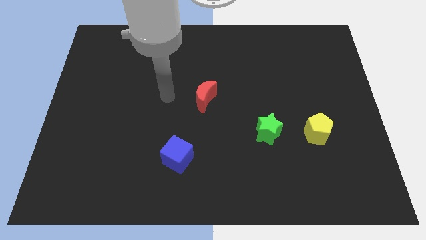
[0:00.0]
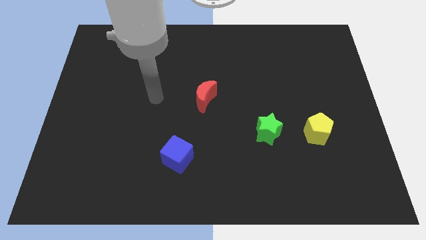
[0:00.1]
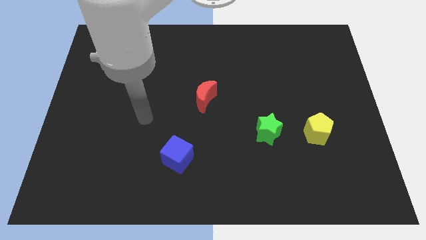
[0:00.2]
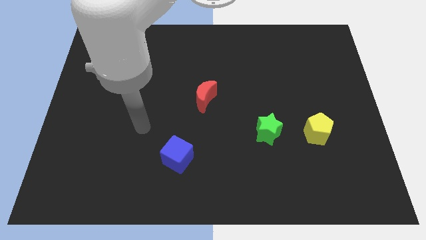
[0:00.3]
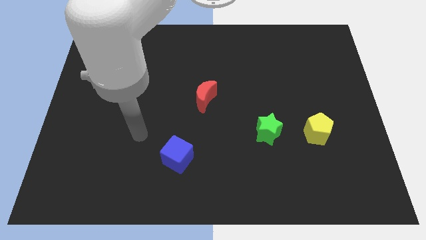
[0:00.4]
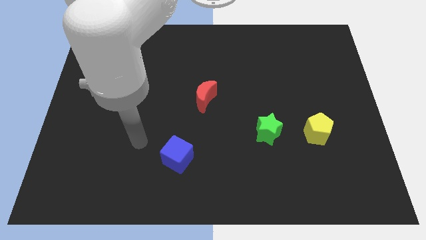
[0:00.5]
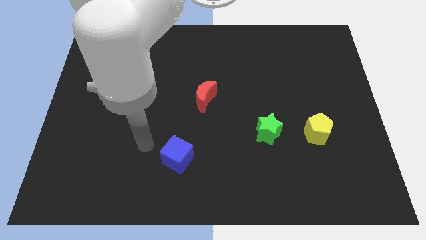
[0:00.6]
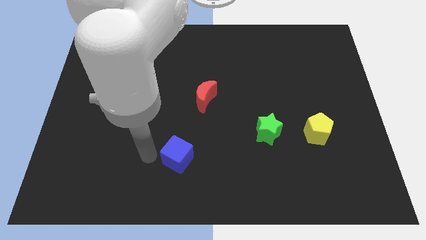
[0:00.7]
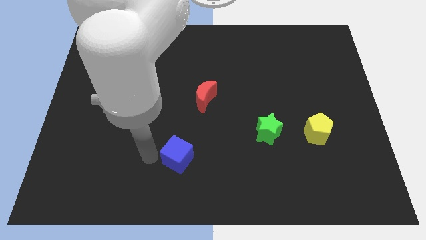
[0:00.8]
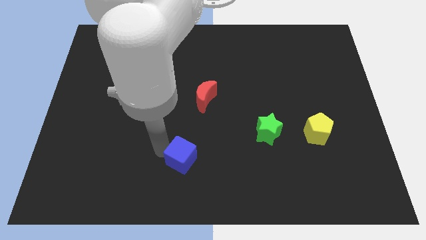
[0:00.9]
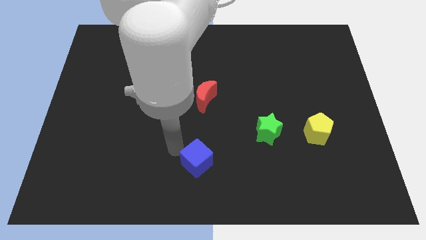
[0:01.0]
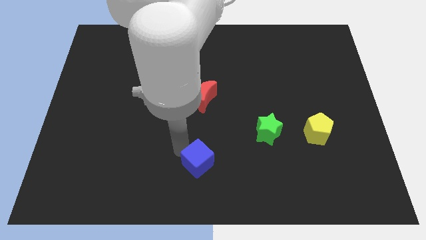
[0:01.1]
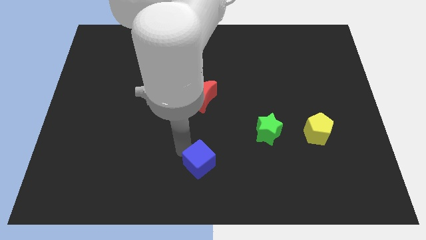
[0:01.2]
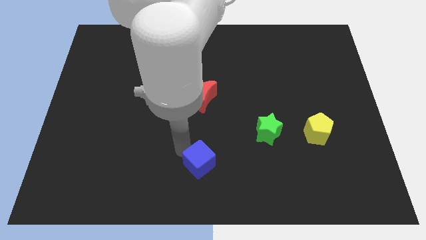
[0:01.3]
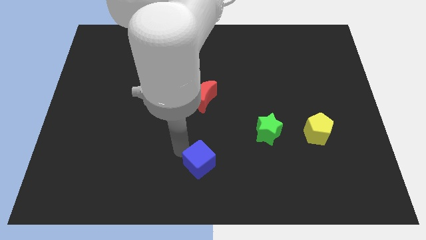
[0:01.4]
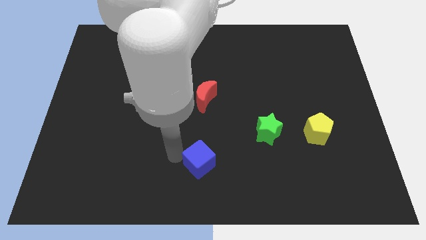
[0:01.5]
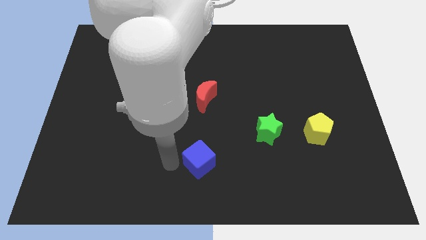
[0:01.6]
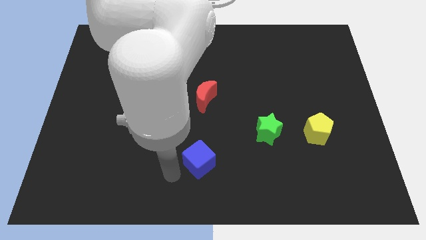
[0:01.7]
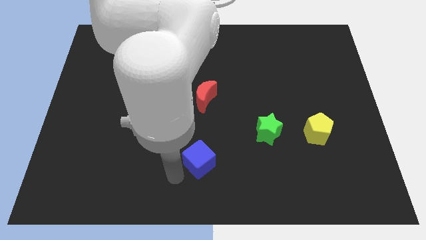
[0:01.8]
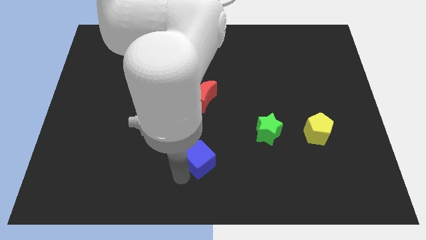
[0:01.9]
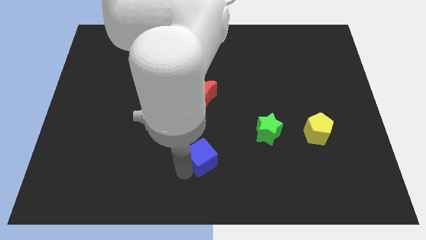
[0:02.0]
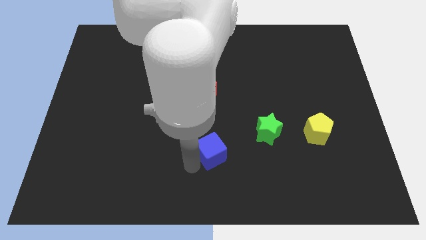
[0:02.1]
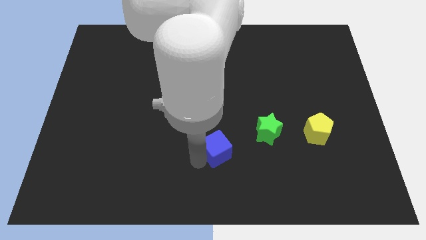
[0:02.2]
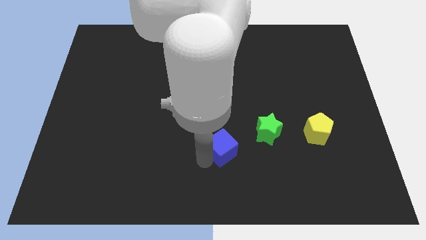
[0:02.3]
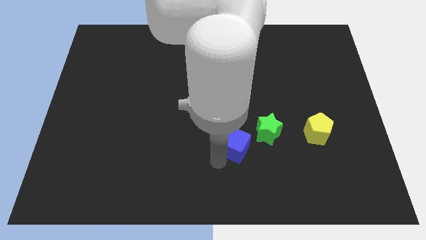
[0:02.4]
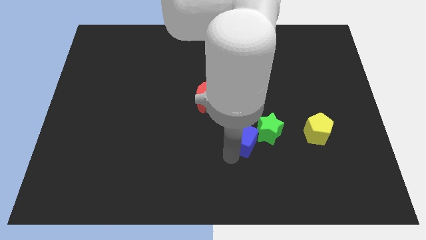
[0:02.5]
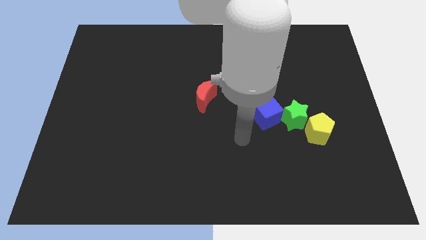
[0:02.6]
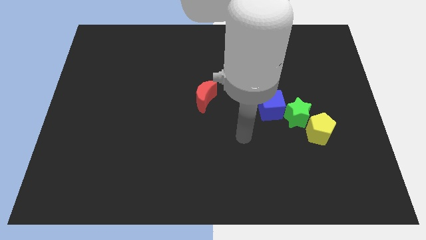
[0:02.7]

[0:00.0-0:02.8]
slide the blue cube to the green block

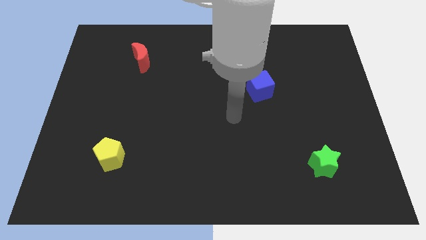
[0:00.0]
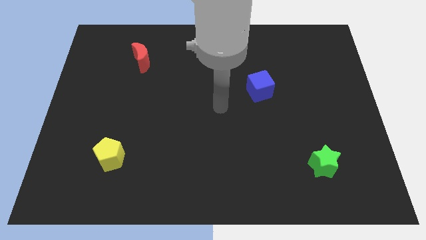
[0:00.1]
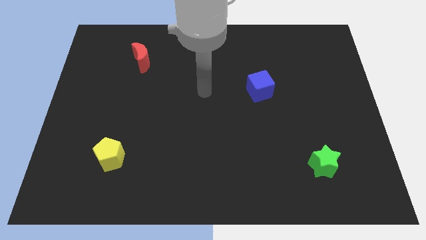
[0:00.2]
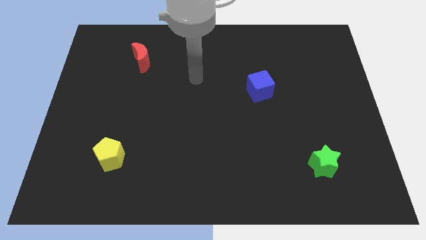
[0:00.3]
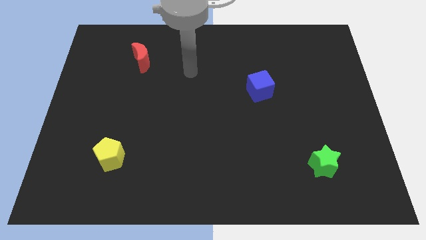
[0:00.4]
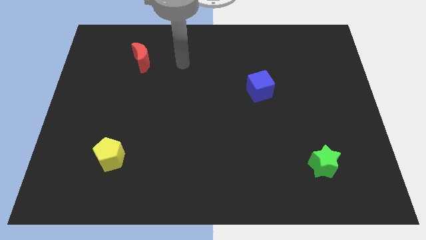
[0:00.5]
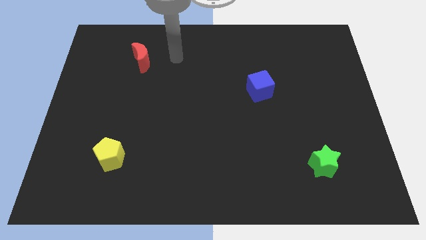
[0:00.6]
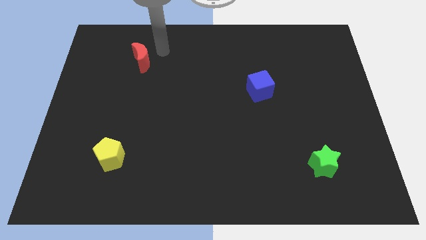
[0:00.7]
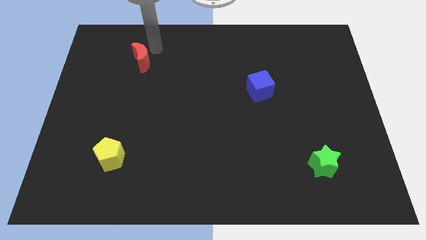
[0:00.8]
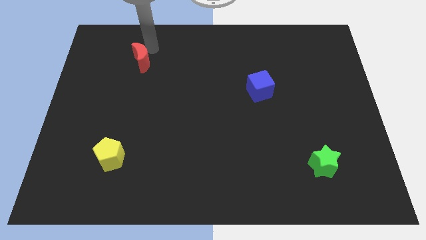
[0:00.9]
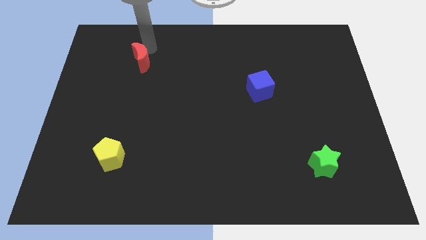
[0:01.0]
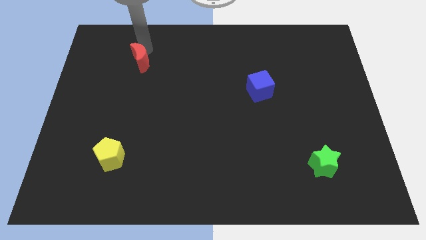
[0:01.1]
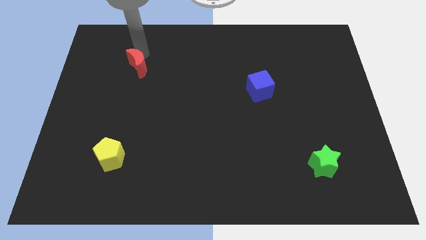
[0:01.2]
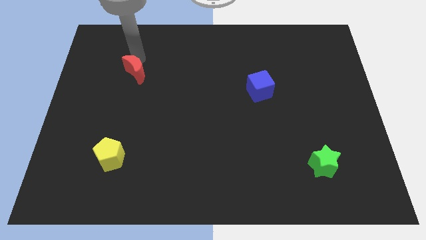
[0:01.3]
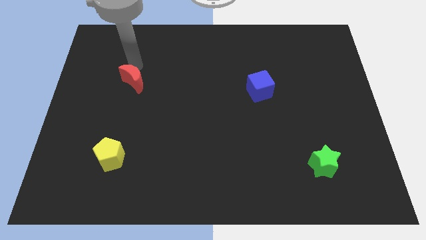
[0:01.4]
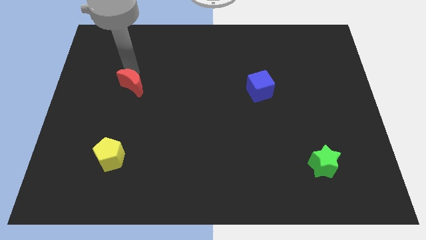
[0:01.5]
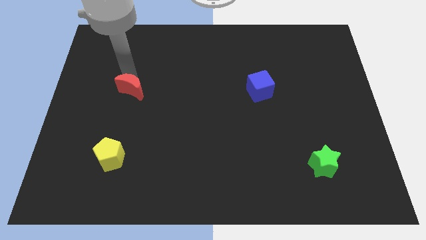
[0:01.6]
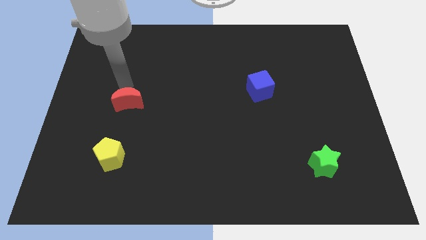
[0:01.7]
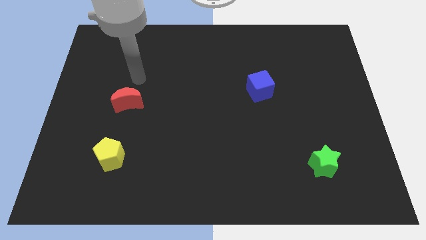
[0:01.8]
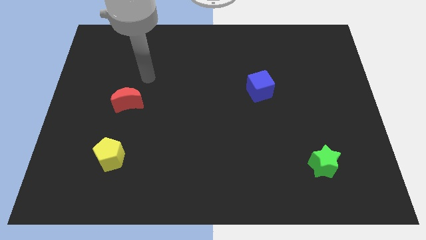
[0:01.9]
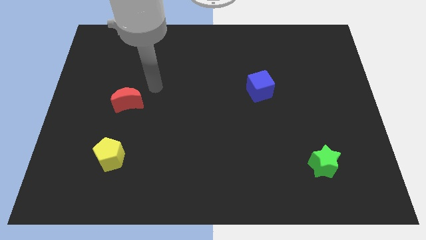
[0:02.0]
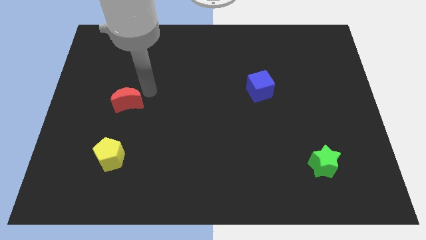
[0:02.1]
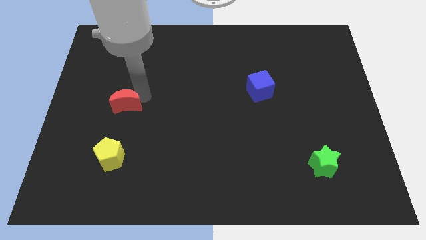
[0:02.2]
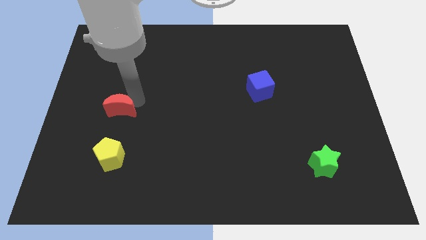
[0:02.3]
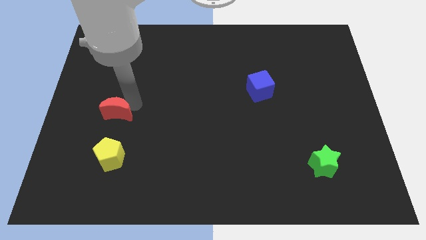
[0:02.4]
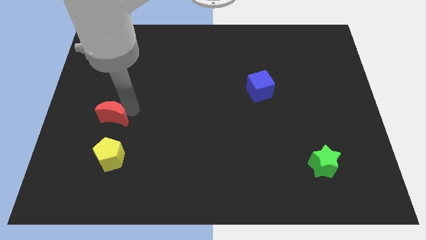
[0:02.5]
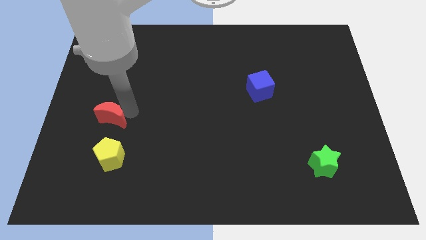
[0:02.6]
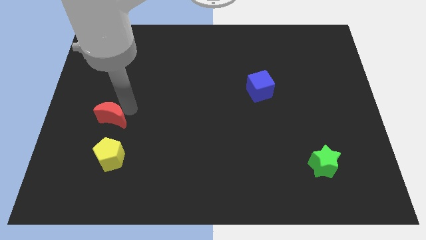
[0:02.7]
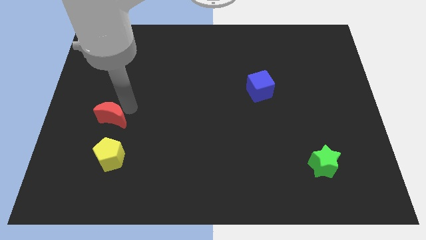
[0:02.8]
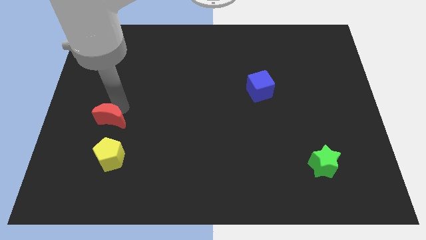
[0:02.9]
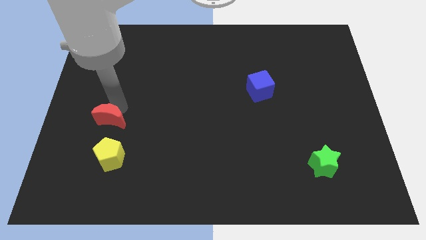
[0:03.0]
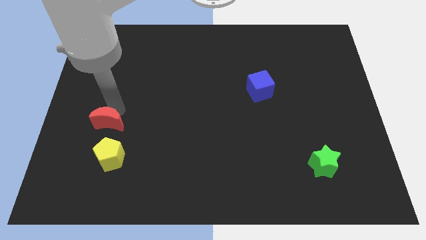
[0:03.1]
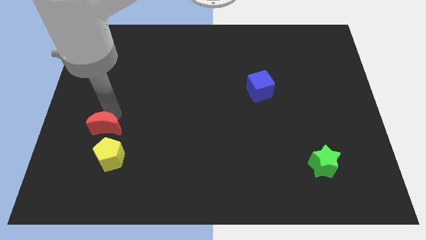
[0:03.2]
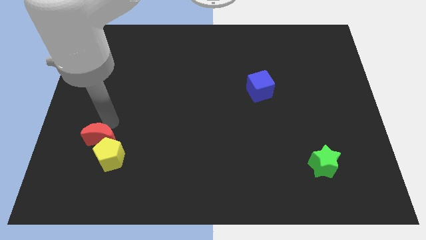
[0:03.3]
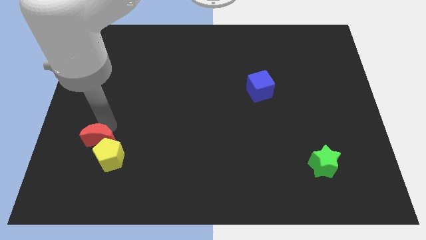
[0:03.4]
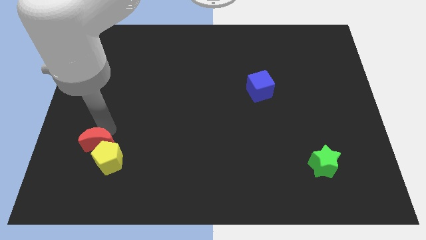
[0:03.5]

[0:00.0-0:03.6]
push the moon to the yellow pentagon

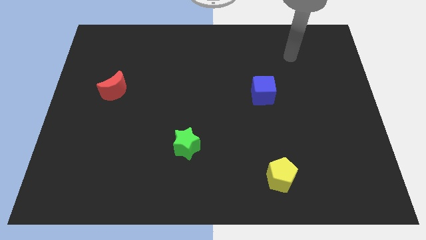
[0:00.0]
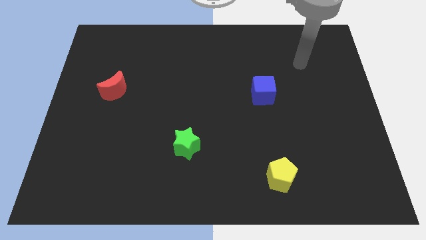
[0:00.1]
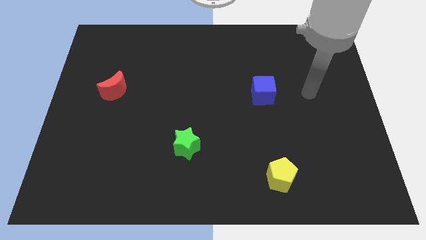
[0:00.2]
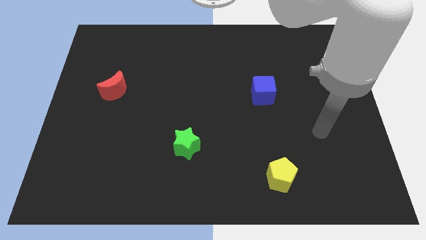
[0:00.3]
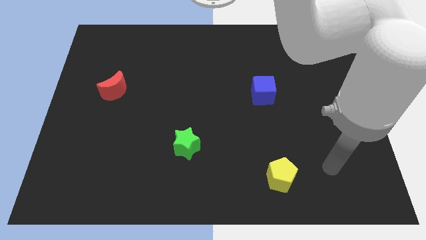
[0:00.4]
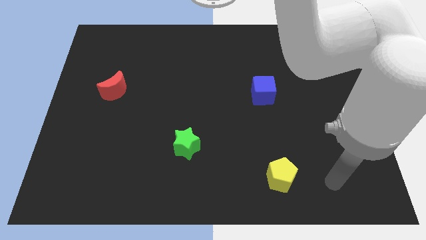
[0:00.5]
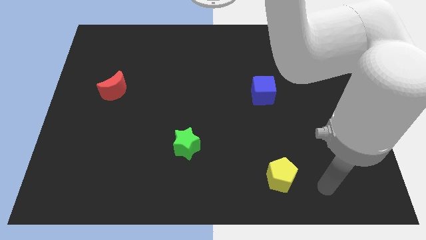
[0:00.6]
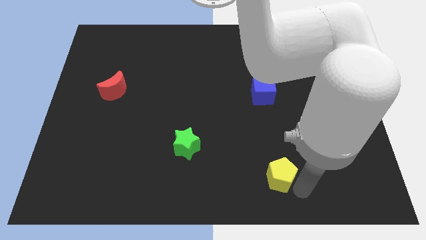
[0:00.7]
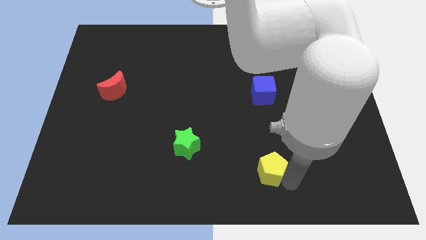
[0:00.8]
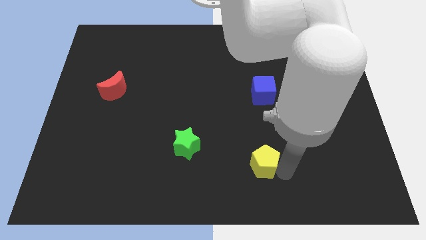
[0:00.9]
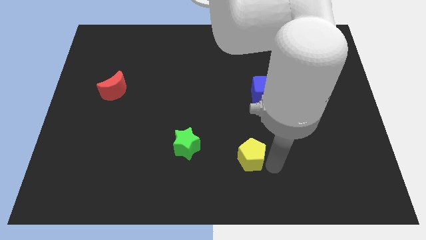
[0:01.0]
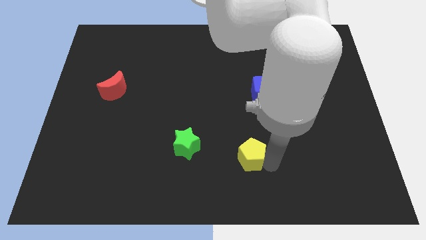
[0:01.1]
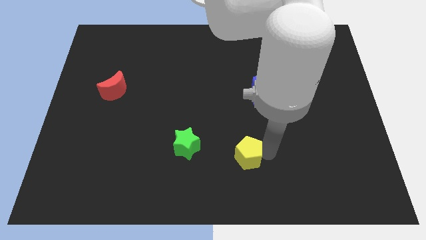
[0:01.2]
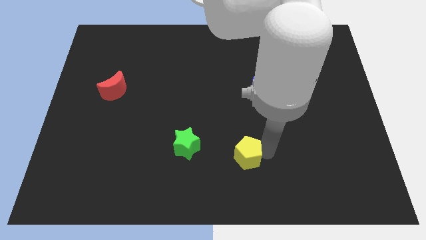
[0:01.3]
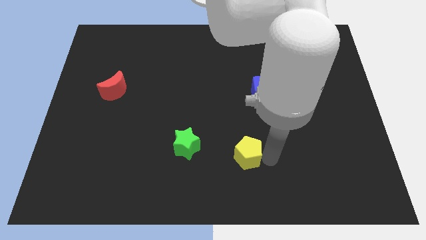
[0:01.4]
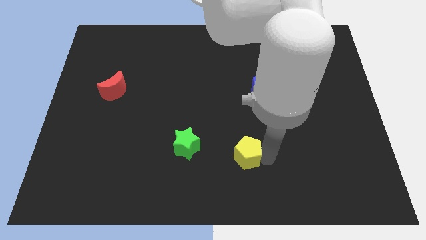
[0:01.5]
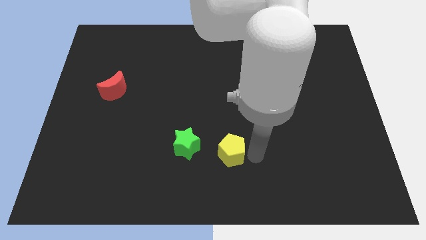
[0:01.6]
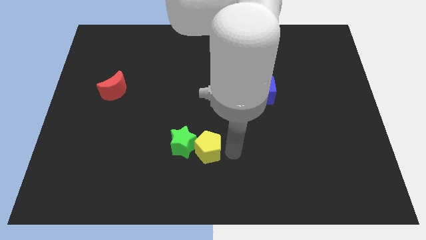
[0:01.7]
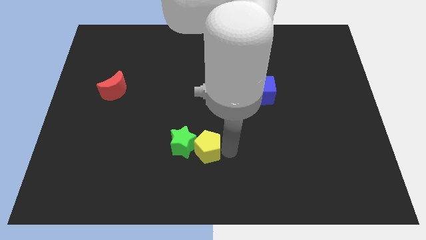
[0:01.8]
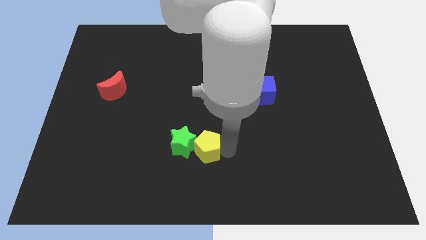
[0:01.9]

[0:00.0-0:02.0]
put the yellow block next to the green star

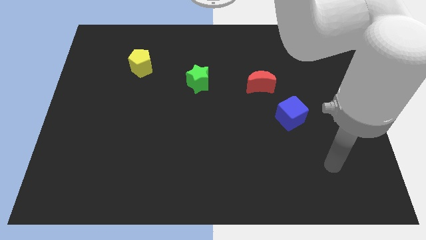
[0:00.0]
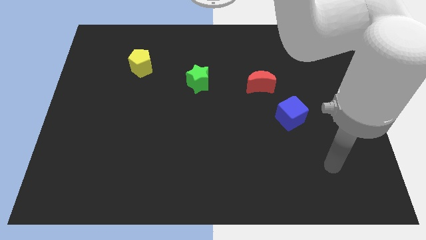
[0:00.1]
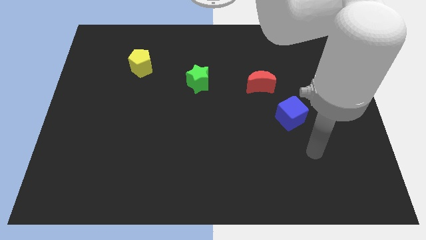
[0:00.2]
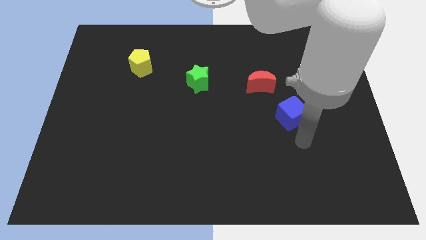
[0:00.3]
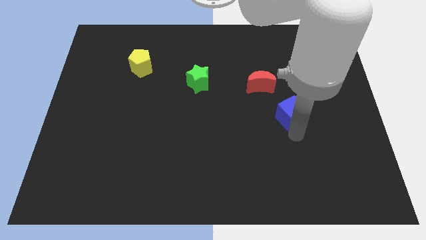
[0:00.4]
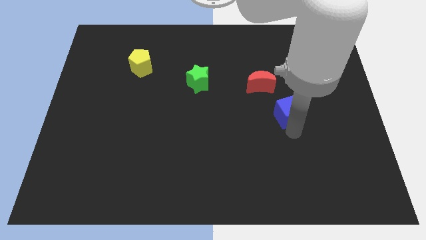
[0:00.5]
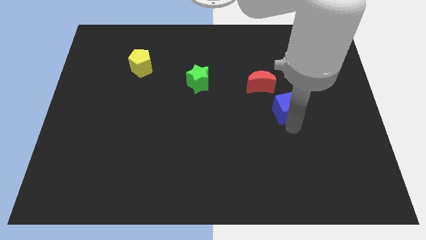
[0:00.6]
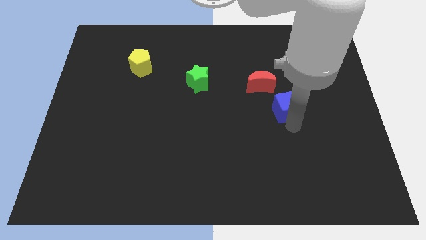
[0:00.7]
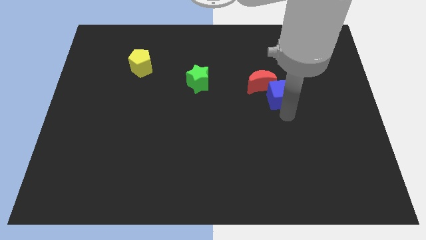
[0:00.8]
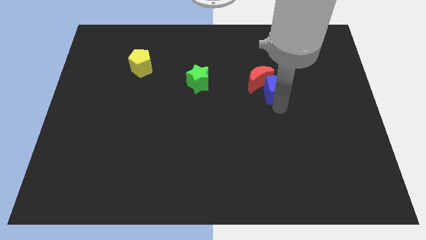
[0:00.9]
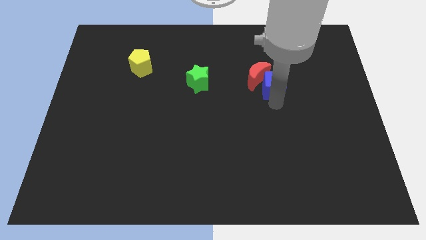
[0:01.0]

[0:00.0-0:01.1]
put the cube close to the moon
